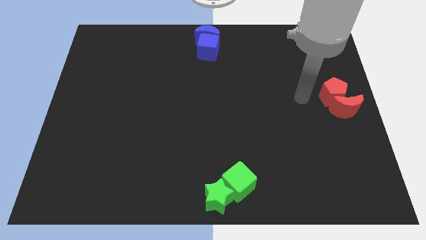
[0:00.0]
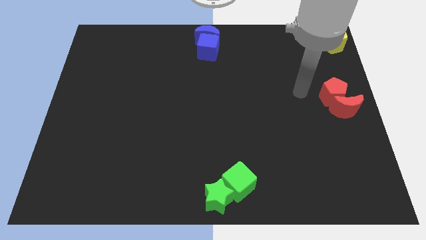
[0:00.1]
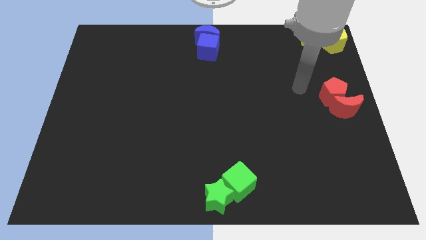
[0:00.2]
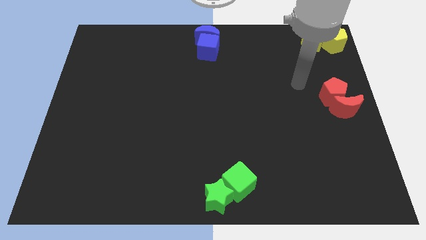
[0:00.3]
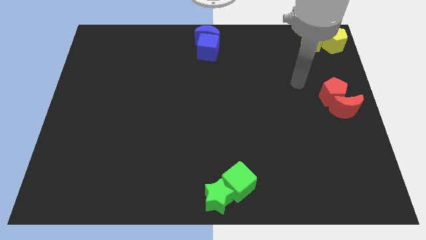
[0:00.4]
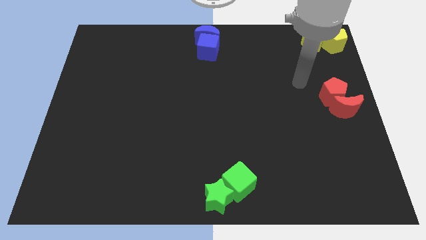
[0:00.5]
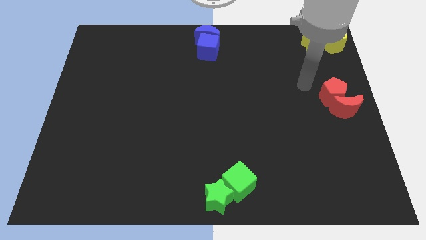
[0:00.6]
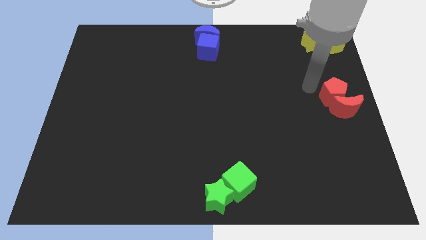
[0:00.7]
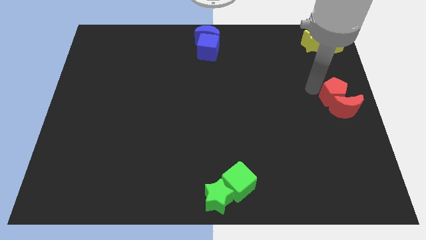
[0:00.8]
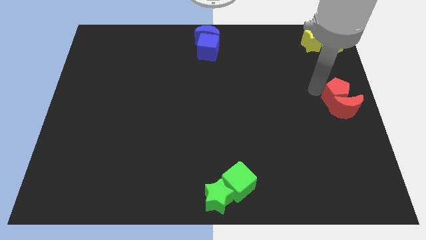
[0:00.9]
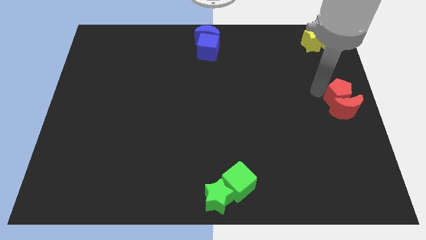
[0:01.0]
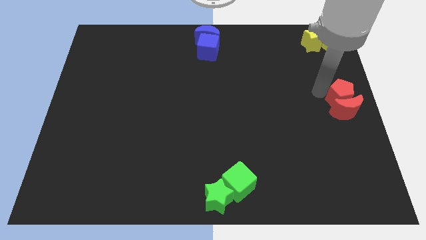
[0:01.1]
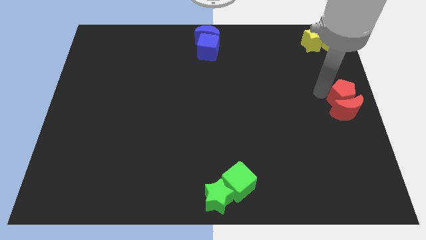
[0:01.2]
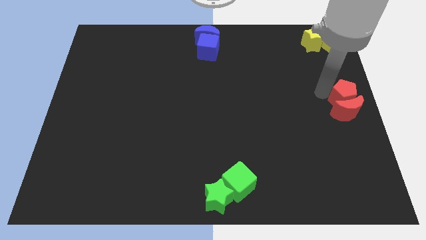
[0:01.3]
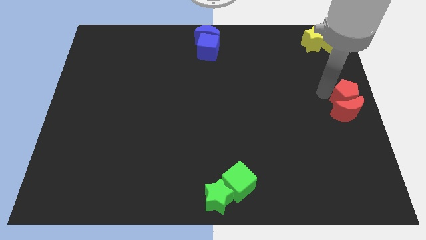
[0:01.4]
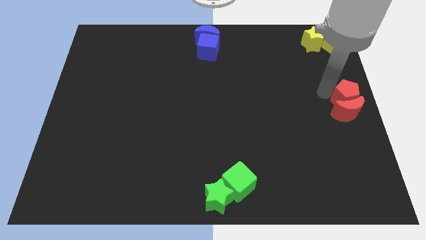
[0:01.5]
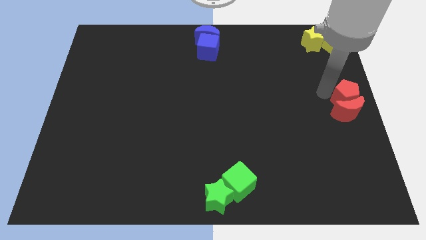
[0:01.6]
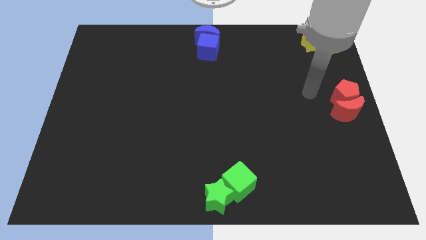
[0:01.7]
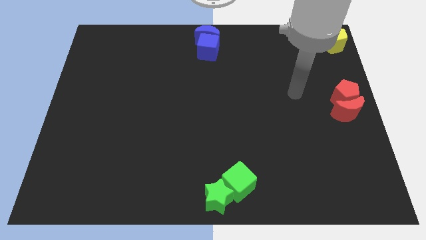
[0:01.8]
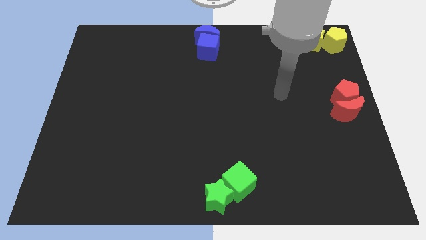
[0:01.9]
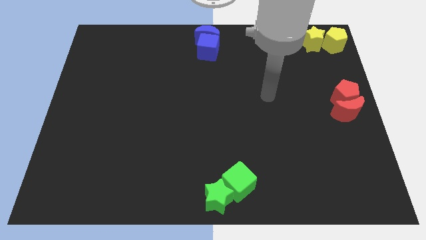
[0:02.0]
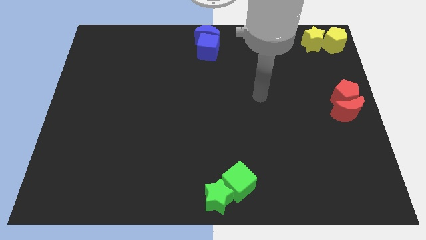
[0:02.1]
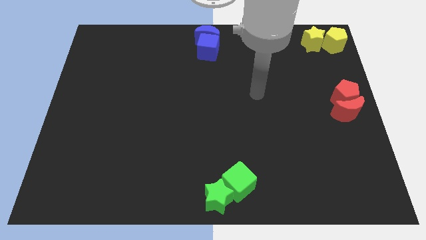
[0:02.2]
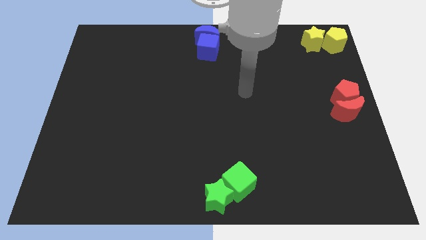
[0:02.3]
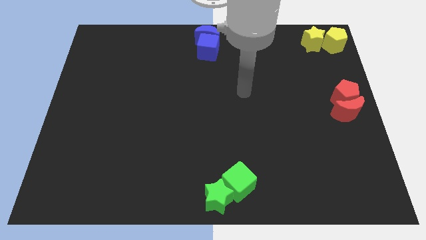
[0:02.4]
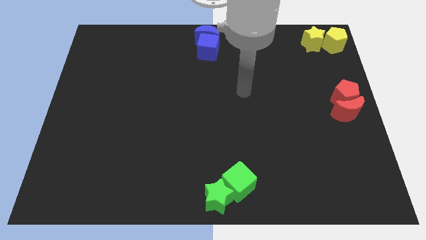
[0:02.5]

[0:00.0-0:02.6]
slightly push red moon towards right side of the board

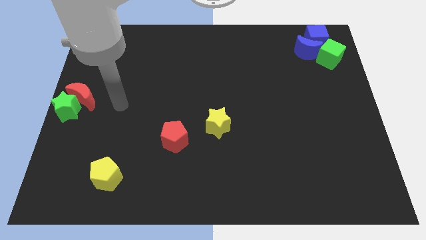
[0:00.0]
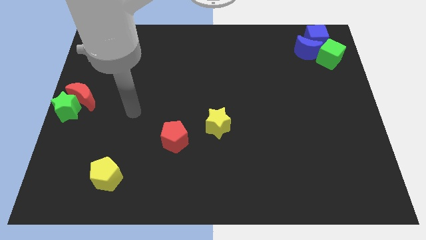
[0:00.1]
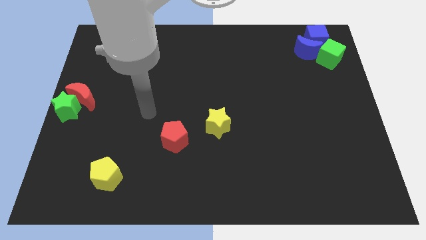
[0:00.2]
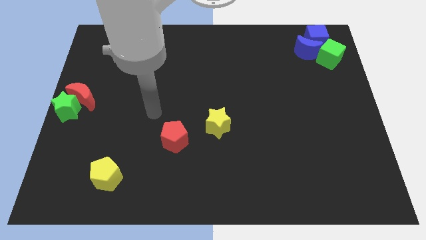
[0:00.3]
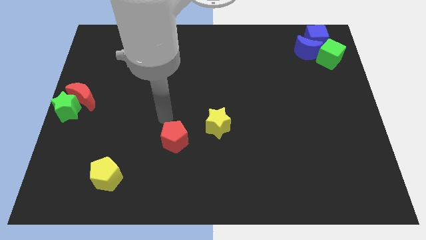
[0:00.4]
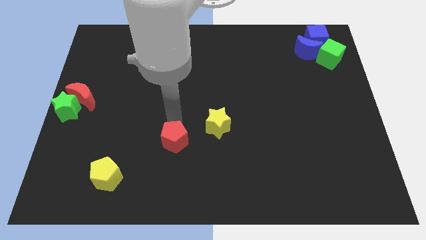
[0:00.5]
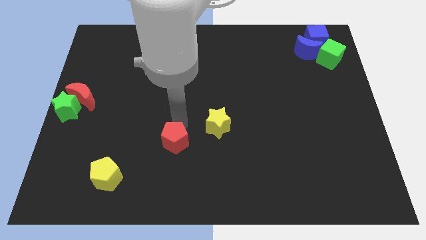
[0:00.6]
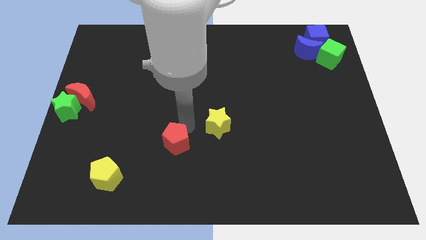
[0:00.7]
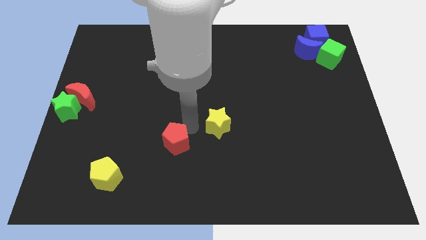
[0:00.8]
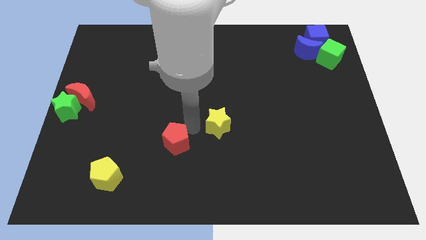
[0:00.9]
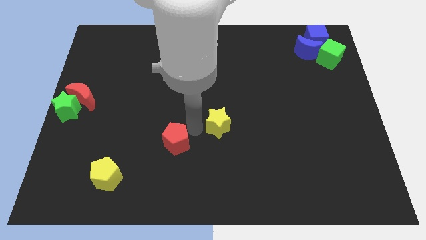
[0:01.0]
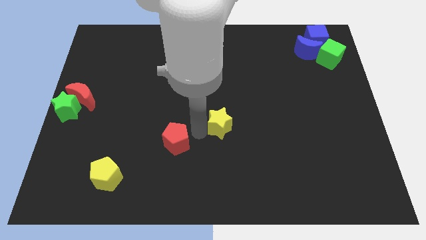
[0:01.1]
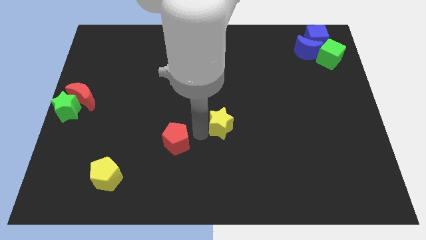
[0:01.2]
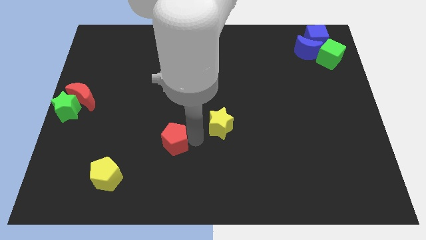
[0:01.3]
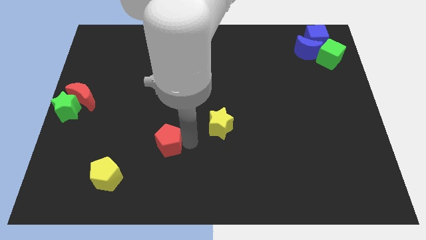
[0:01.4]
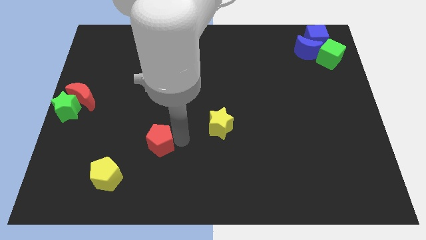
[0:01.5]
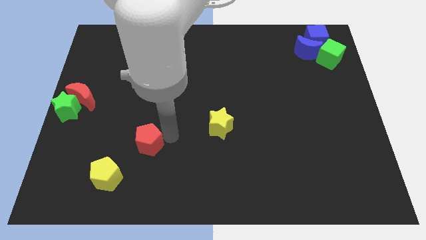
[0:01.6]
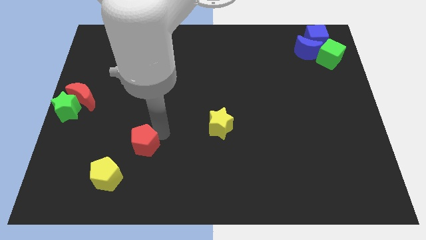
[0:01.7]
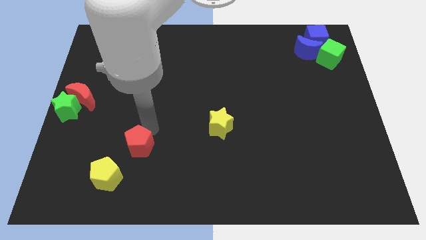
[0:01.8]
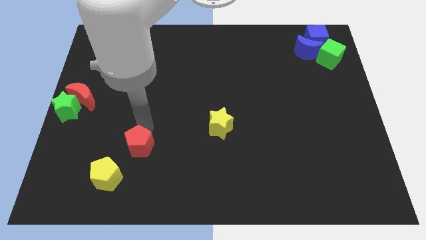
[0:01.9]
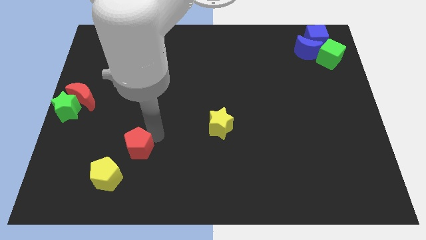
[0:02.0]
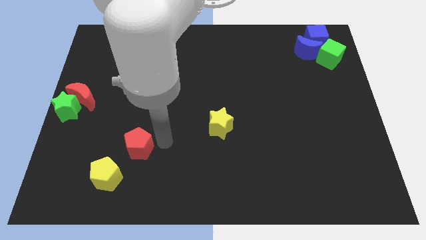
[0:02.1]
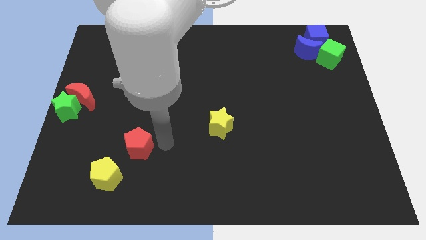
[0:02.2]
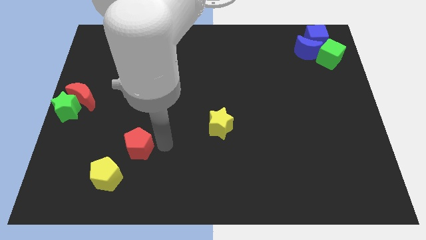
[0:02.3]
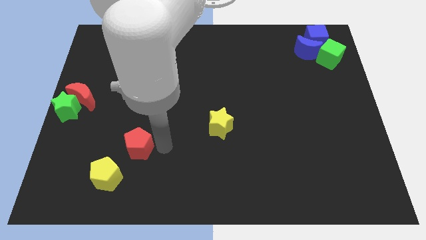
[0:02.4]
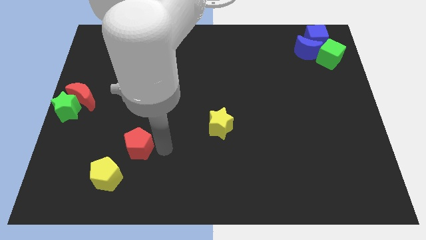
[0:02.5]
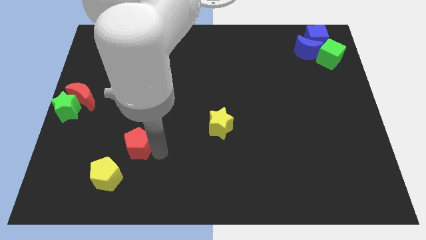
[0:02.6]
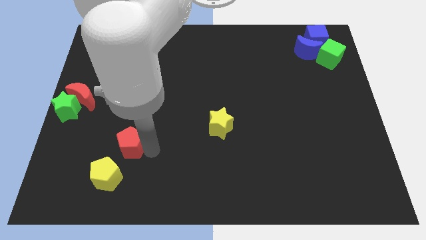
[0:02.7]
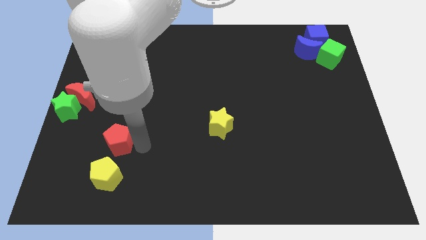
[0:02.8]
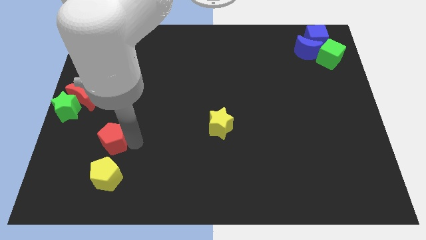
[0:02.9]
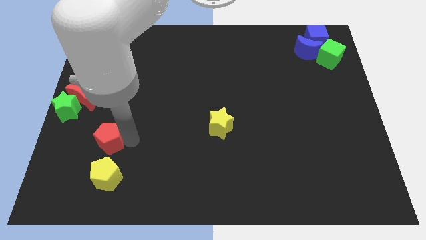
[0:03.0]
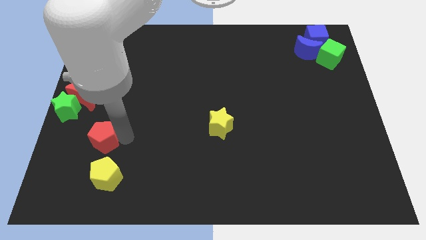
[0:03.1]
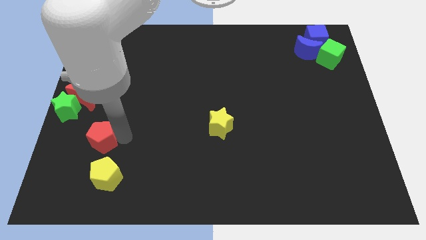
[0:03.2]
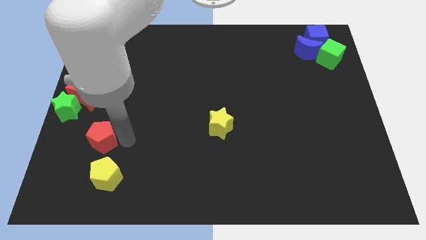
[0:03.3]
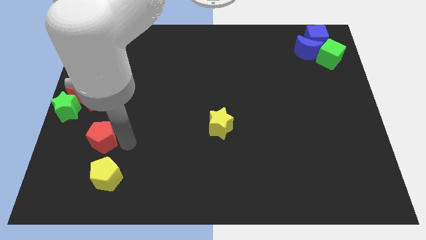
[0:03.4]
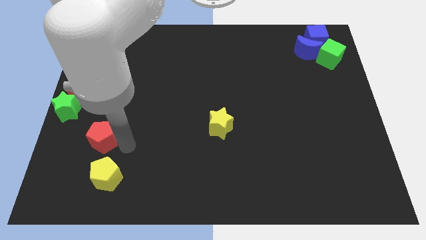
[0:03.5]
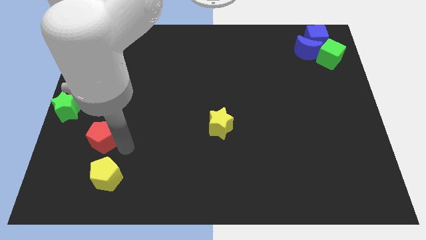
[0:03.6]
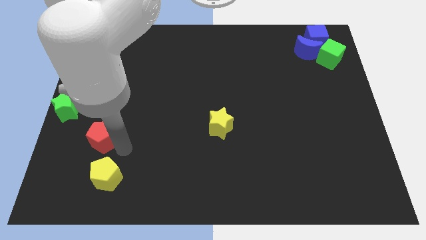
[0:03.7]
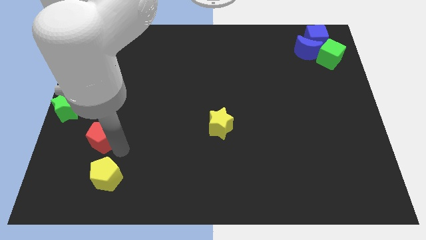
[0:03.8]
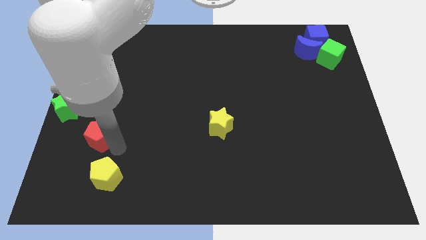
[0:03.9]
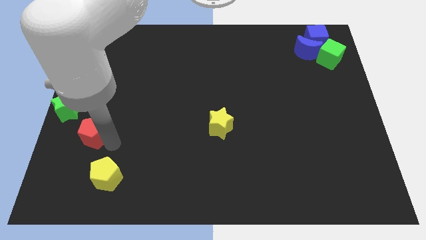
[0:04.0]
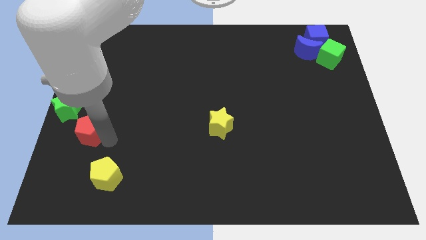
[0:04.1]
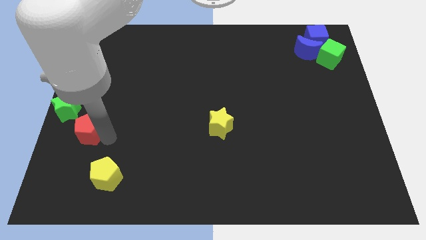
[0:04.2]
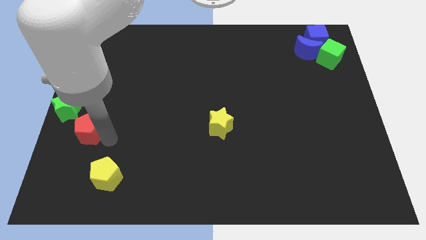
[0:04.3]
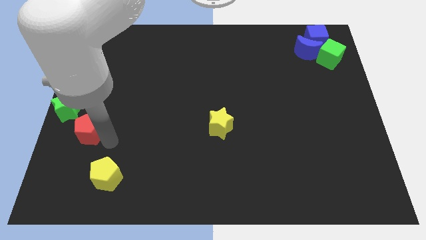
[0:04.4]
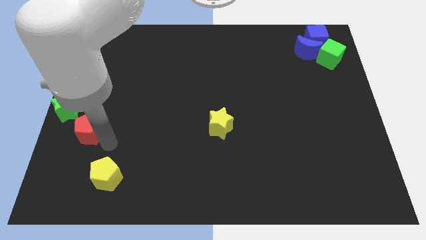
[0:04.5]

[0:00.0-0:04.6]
move the red pentagon to the bottom right of the green star

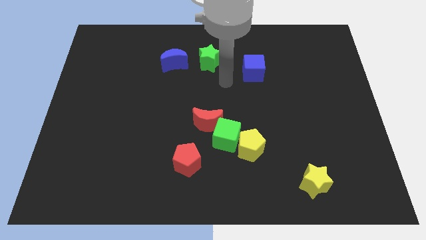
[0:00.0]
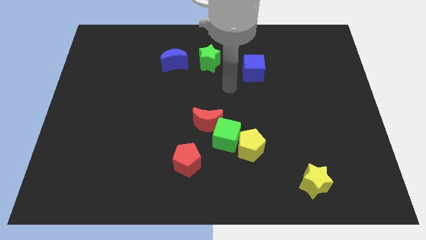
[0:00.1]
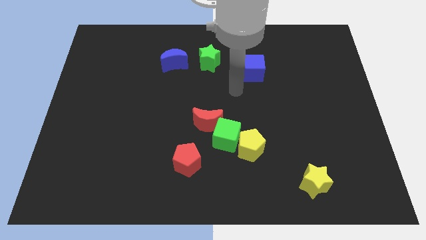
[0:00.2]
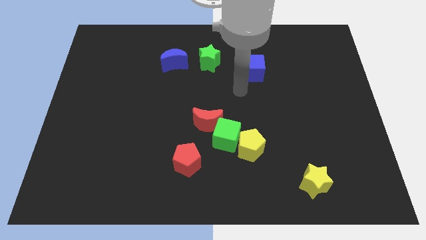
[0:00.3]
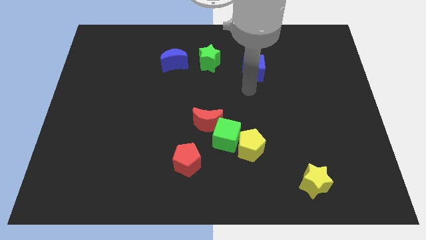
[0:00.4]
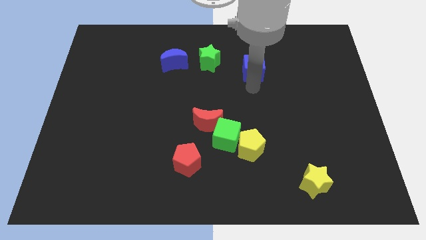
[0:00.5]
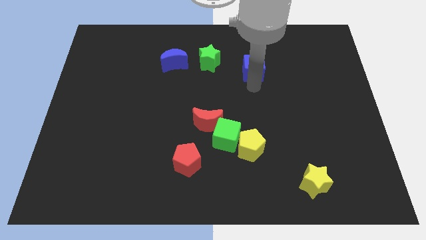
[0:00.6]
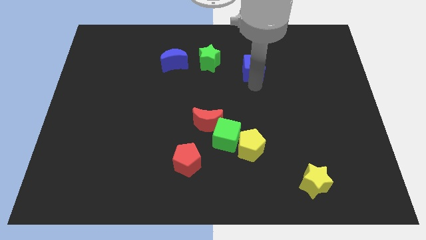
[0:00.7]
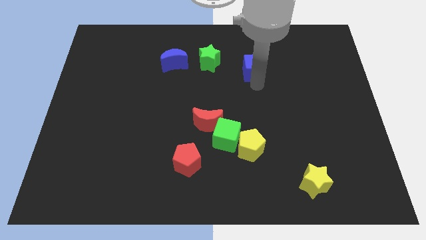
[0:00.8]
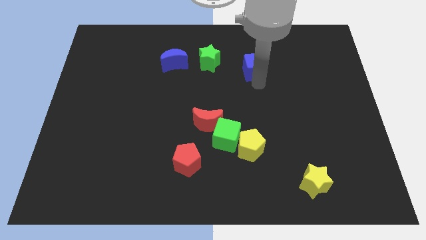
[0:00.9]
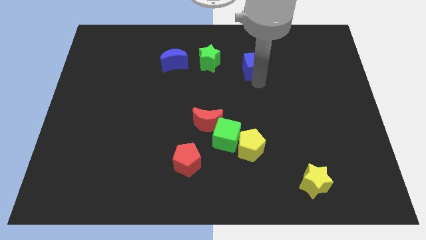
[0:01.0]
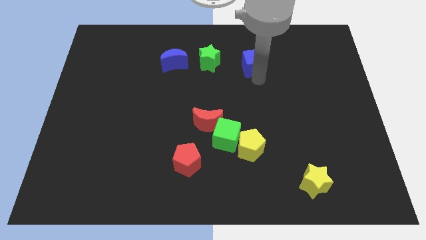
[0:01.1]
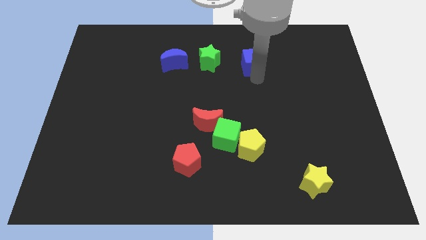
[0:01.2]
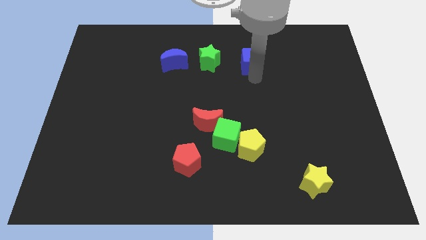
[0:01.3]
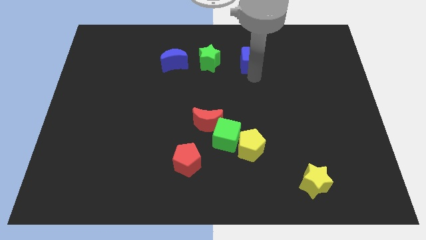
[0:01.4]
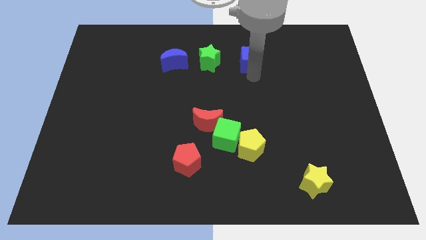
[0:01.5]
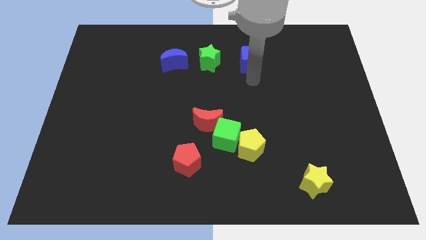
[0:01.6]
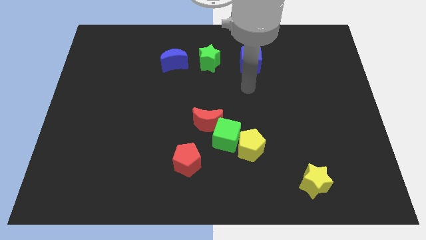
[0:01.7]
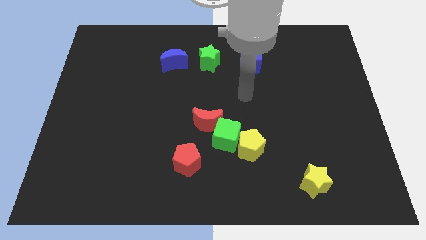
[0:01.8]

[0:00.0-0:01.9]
place the blue cube to the right of the green star
